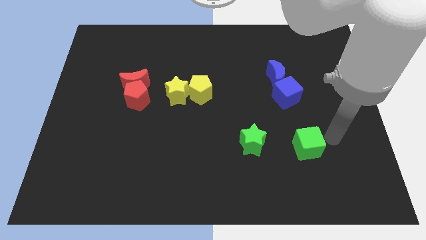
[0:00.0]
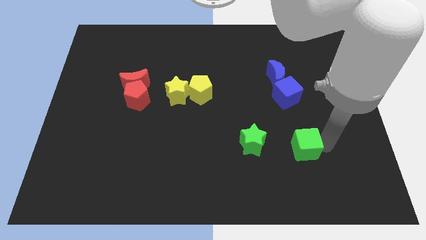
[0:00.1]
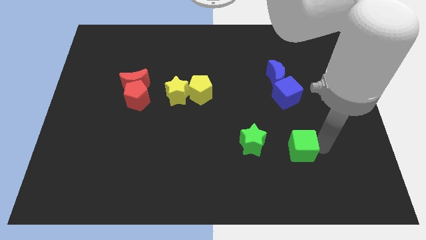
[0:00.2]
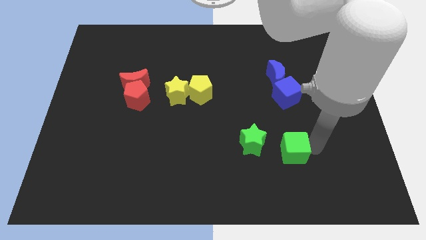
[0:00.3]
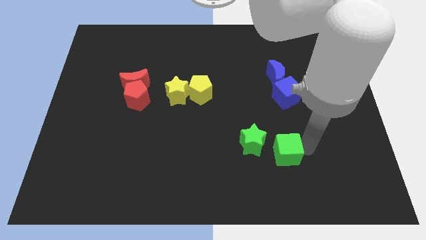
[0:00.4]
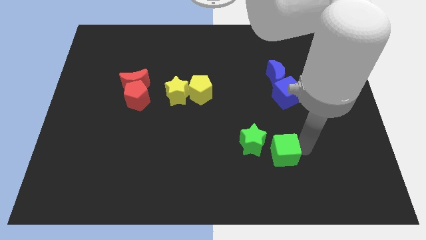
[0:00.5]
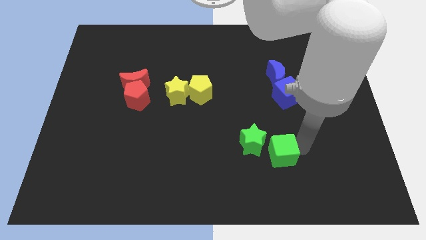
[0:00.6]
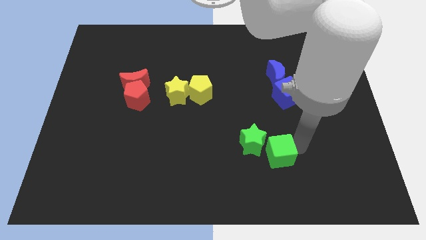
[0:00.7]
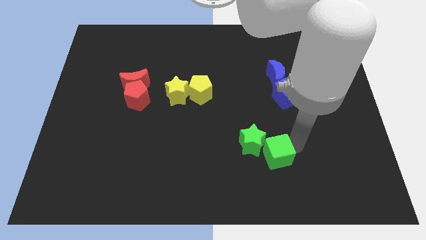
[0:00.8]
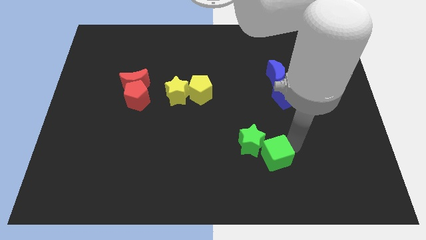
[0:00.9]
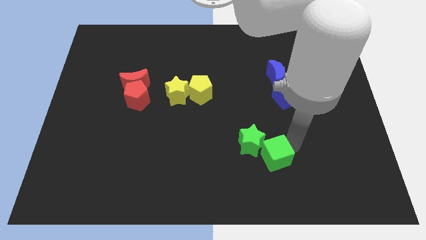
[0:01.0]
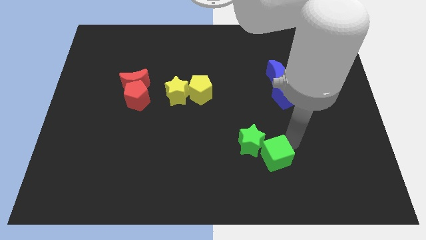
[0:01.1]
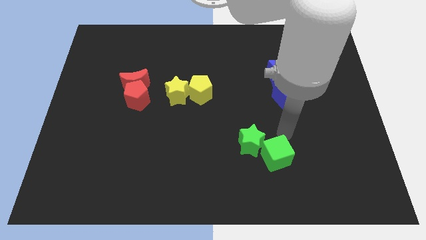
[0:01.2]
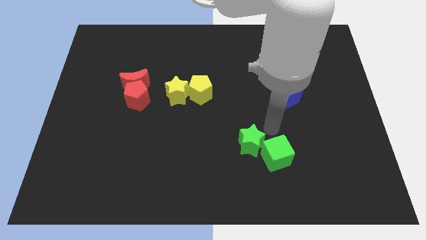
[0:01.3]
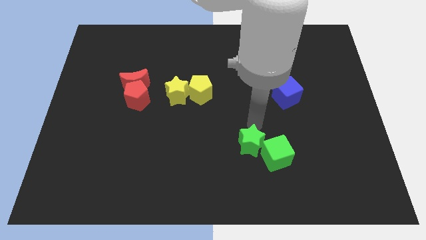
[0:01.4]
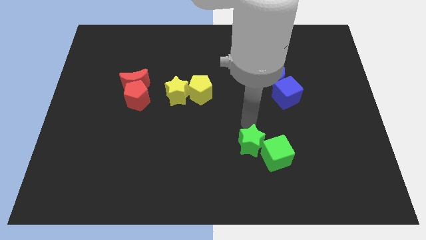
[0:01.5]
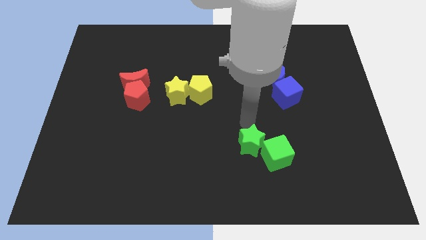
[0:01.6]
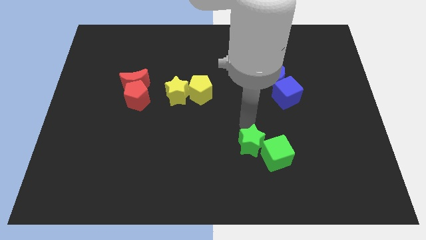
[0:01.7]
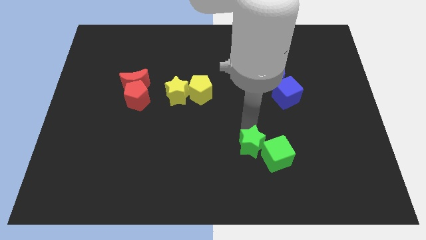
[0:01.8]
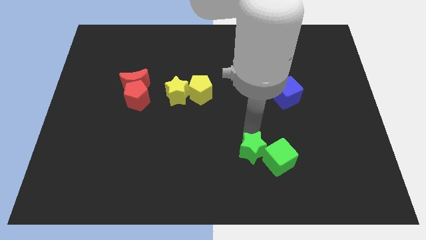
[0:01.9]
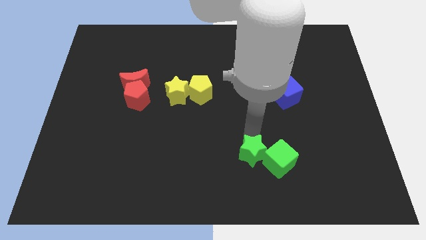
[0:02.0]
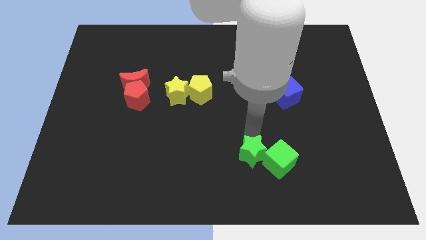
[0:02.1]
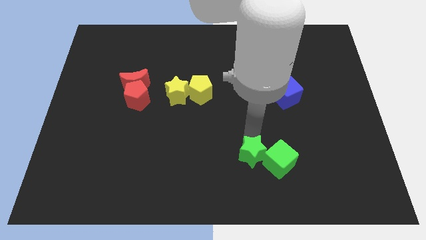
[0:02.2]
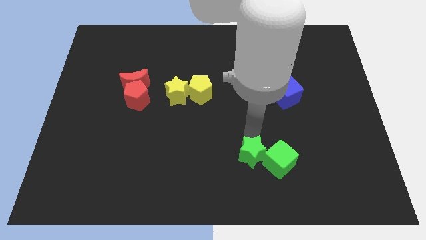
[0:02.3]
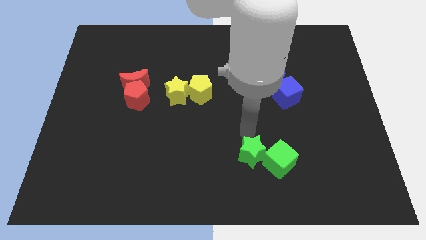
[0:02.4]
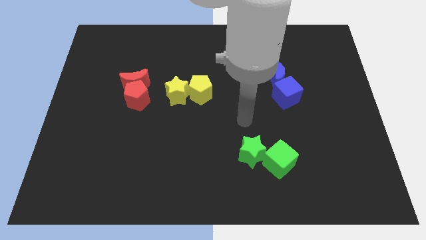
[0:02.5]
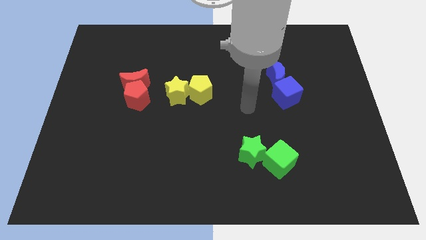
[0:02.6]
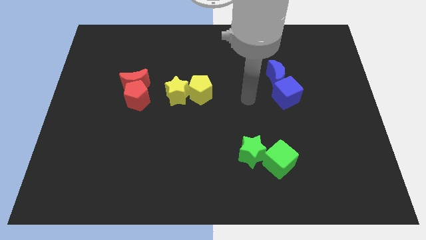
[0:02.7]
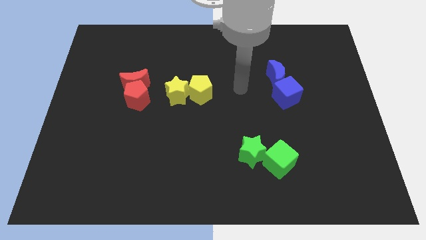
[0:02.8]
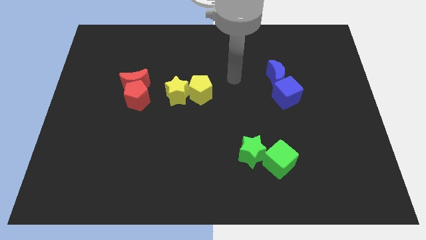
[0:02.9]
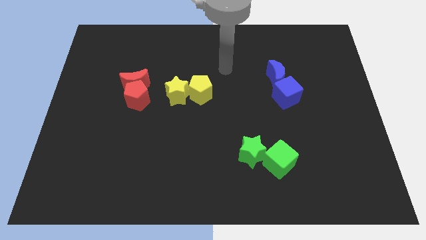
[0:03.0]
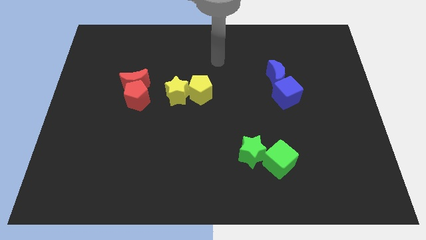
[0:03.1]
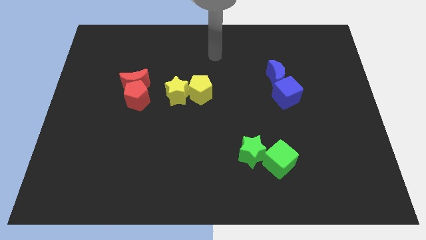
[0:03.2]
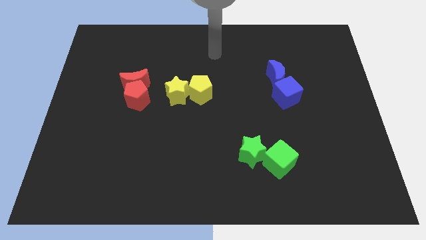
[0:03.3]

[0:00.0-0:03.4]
move the green cube close to green star

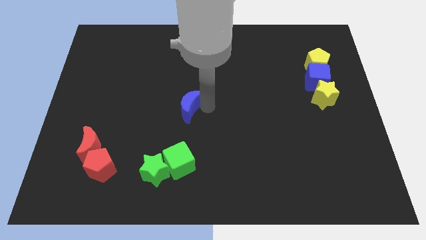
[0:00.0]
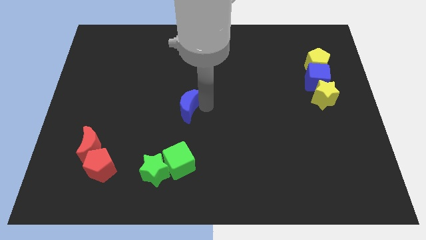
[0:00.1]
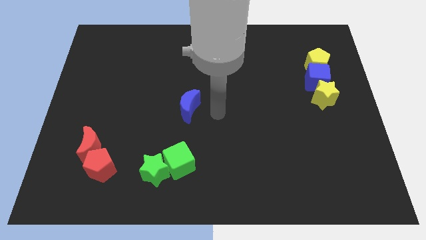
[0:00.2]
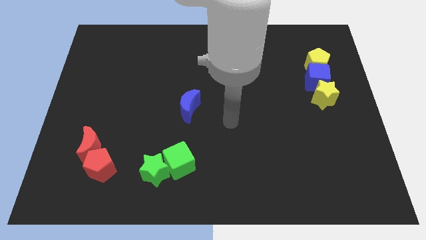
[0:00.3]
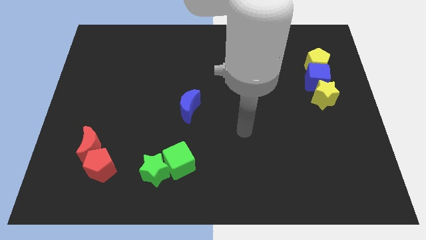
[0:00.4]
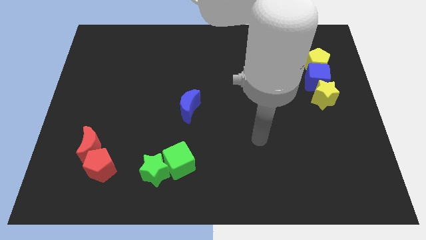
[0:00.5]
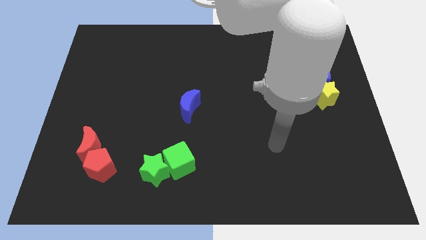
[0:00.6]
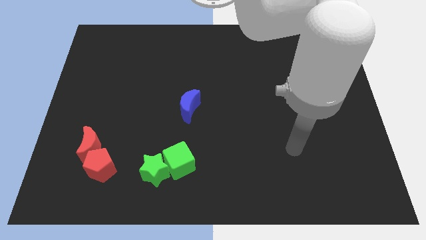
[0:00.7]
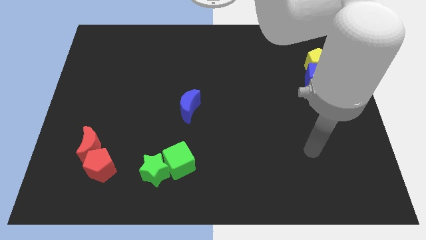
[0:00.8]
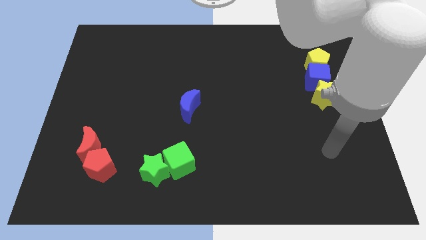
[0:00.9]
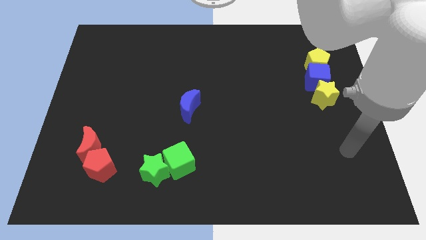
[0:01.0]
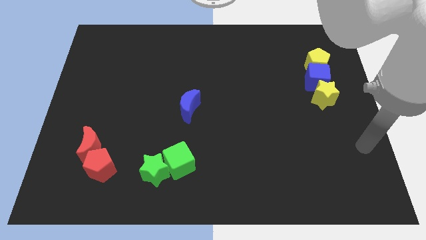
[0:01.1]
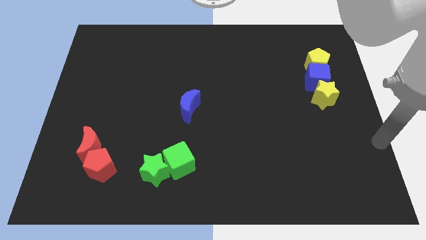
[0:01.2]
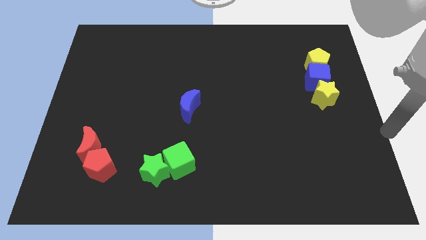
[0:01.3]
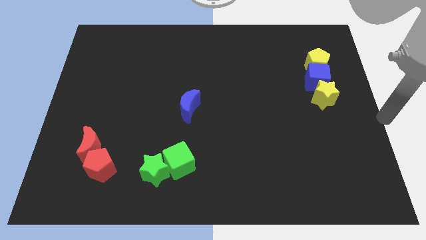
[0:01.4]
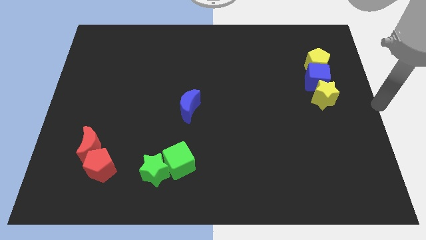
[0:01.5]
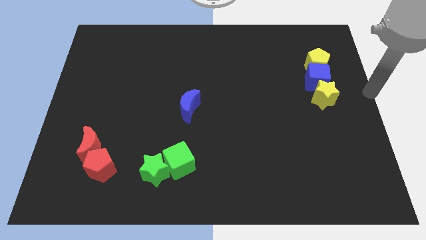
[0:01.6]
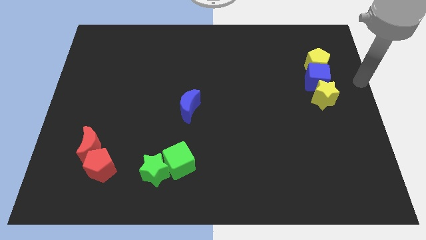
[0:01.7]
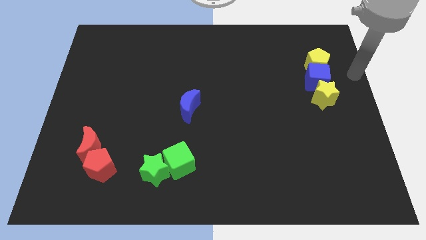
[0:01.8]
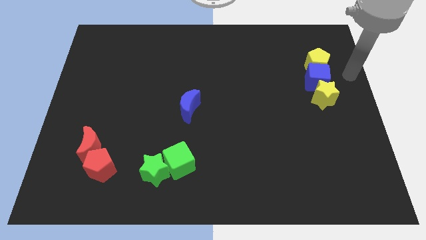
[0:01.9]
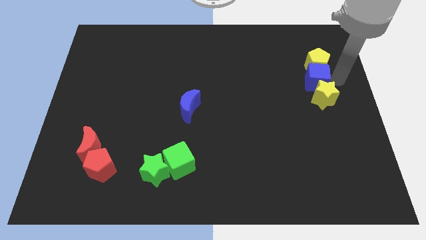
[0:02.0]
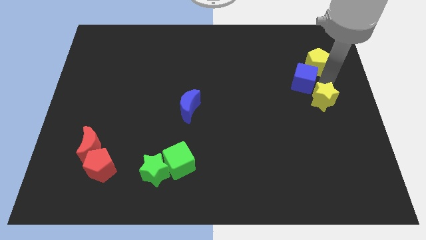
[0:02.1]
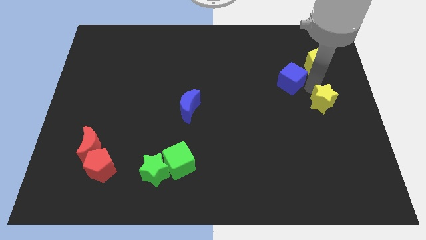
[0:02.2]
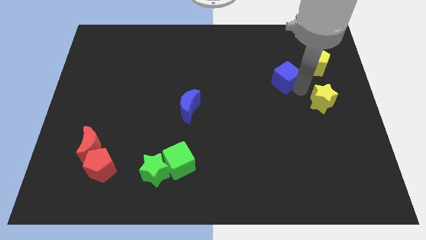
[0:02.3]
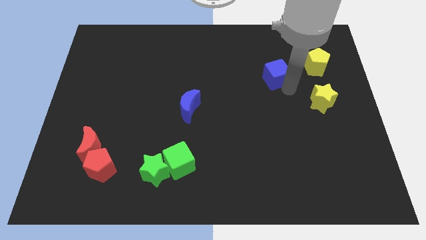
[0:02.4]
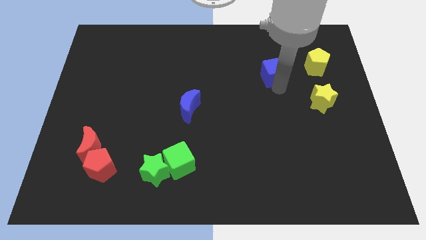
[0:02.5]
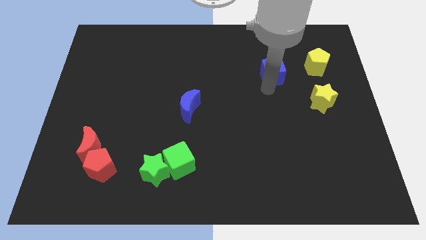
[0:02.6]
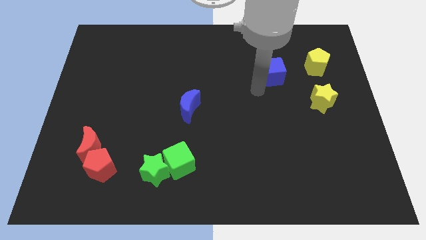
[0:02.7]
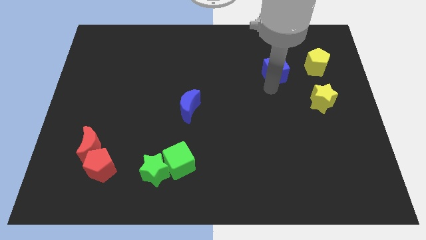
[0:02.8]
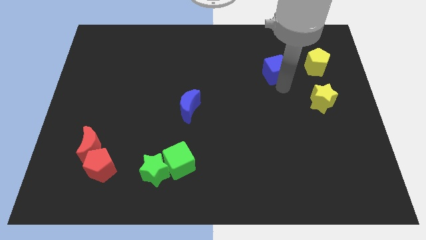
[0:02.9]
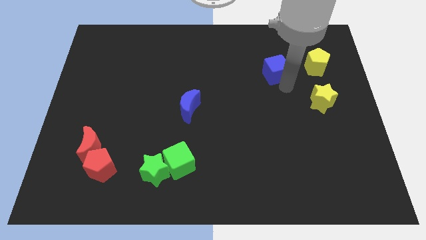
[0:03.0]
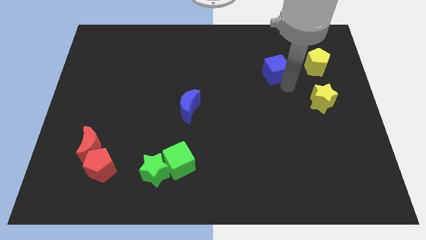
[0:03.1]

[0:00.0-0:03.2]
move the arm away from the blue moon

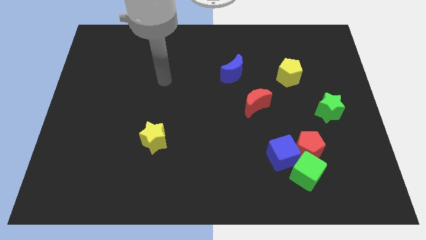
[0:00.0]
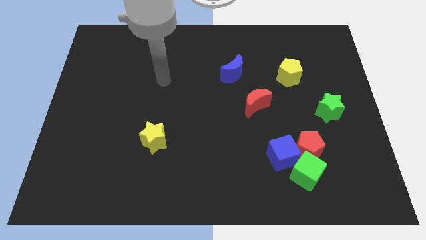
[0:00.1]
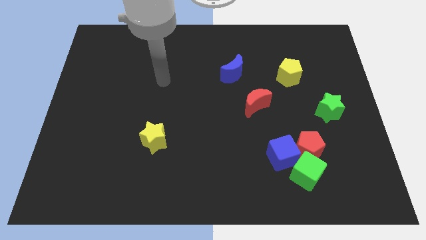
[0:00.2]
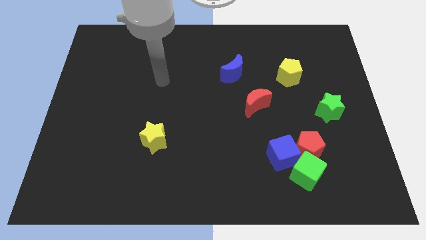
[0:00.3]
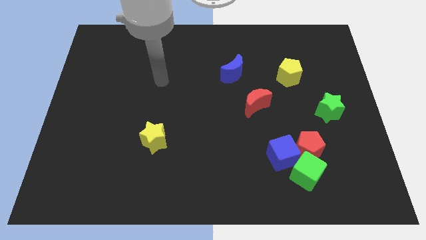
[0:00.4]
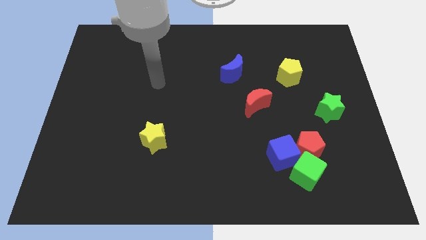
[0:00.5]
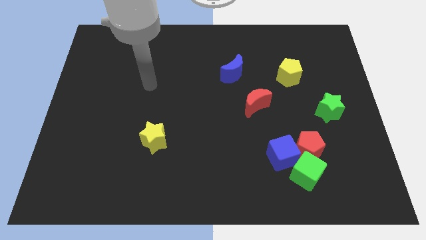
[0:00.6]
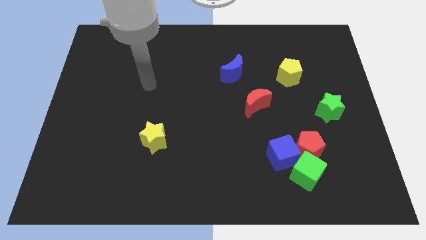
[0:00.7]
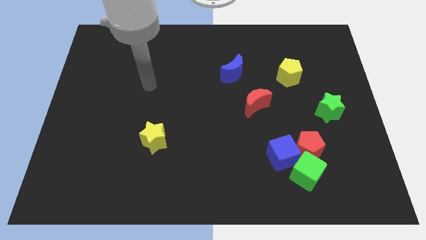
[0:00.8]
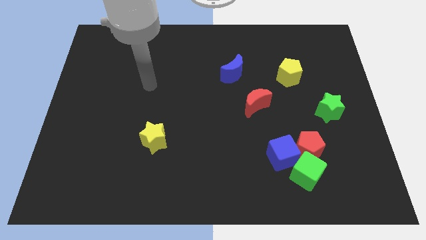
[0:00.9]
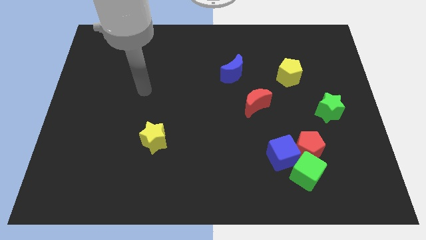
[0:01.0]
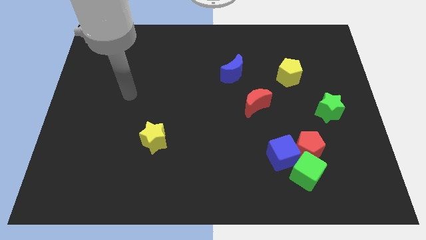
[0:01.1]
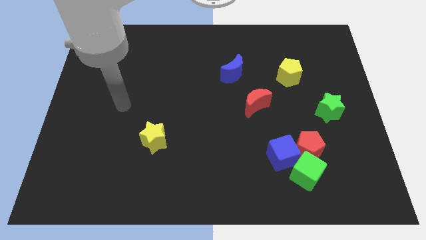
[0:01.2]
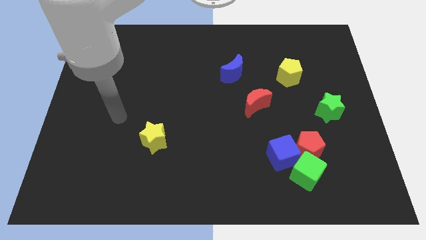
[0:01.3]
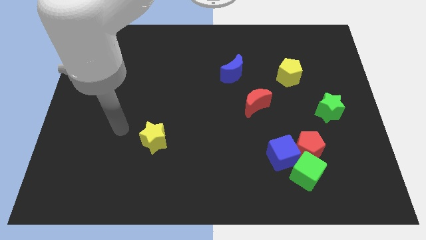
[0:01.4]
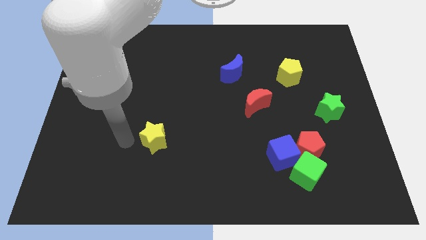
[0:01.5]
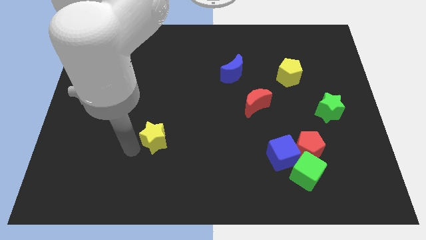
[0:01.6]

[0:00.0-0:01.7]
point your arm at the left of the yellow star

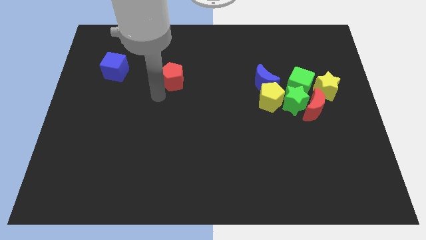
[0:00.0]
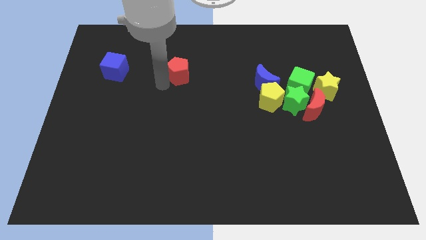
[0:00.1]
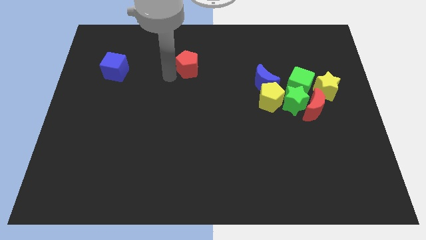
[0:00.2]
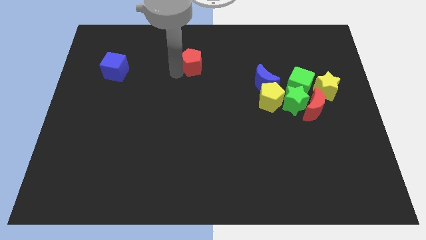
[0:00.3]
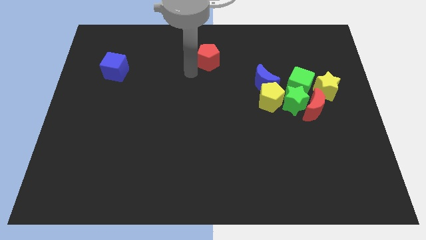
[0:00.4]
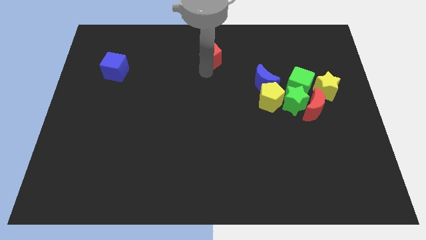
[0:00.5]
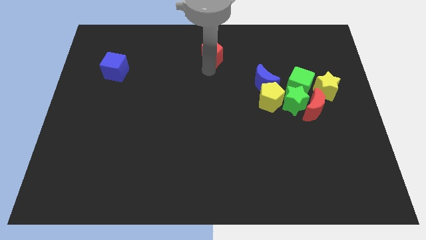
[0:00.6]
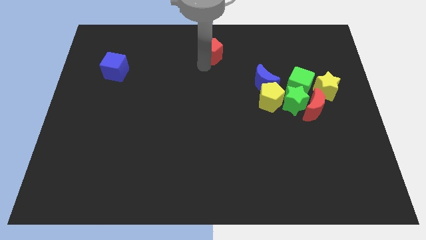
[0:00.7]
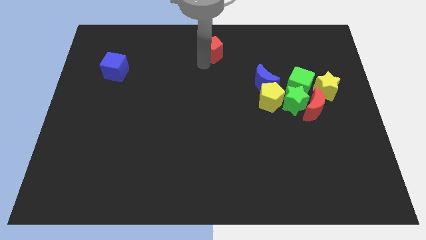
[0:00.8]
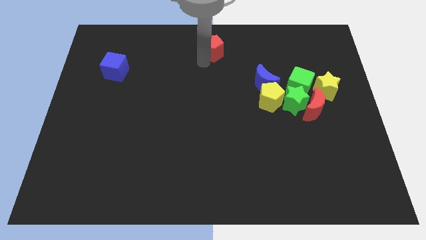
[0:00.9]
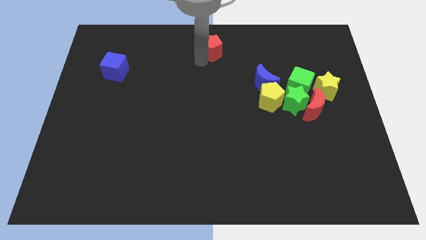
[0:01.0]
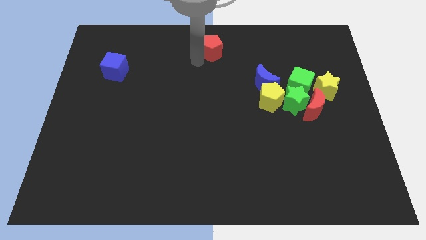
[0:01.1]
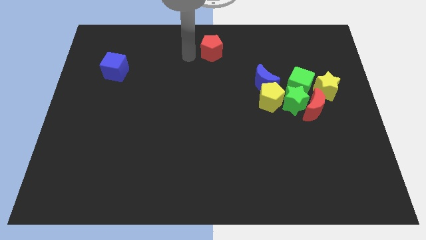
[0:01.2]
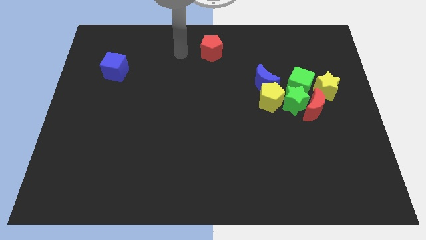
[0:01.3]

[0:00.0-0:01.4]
move the red pentagon to the top center
